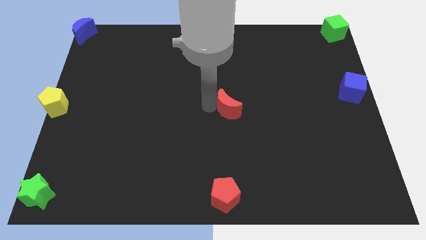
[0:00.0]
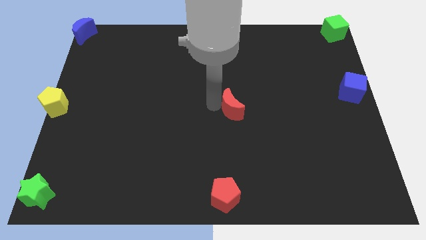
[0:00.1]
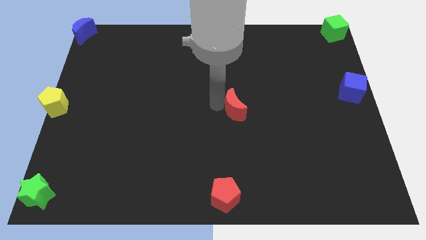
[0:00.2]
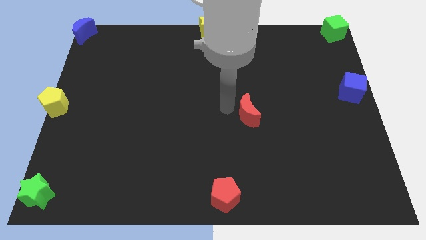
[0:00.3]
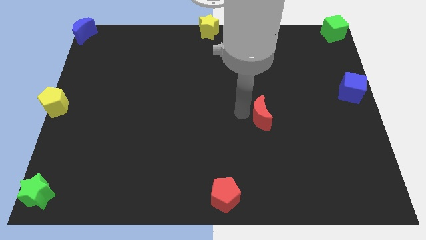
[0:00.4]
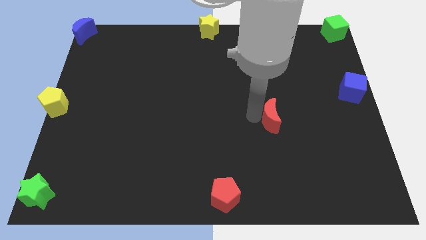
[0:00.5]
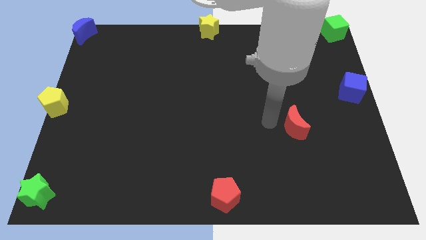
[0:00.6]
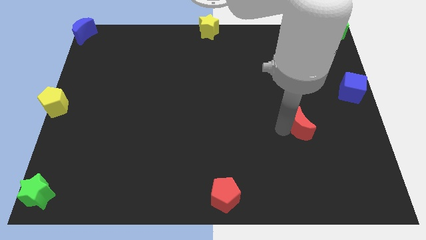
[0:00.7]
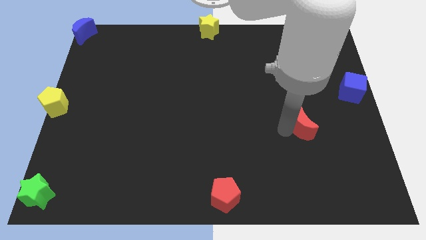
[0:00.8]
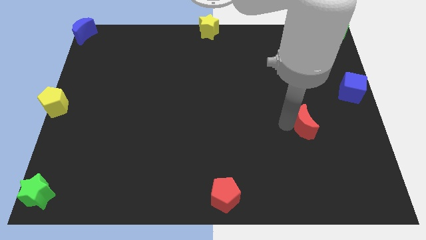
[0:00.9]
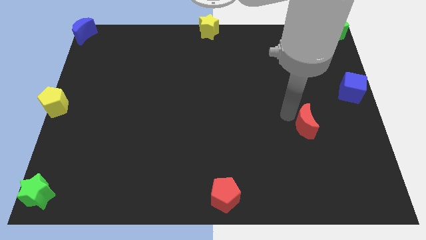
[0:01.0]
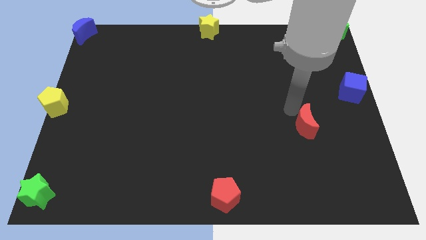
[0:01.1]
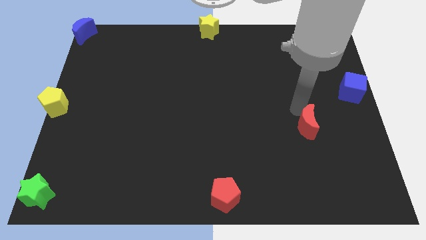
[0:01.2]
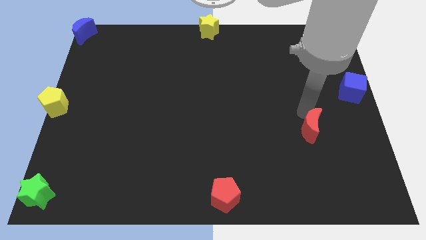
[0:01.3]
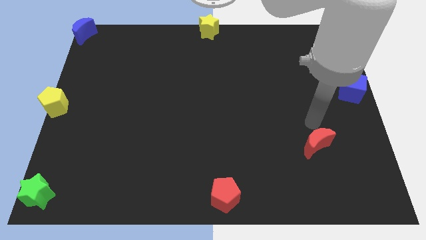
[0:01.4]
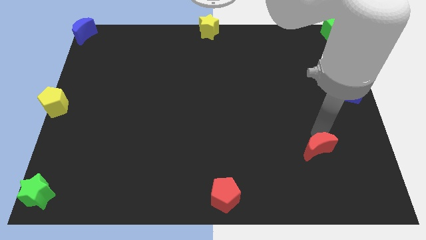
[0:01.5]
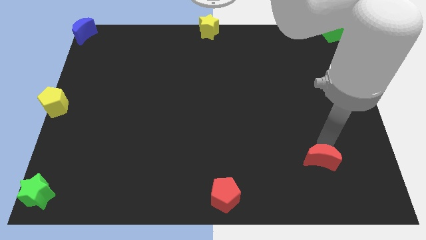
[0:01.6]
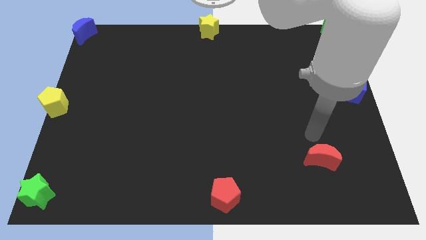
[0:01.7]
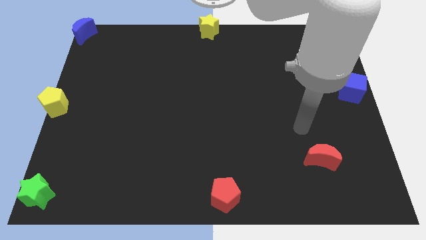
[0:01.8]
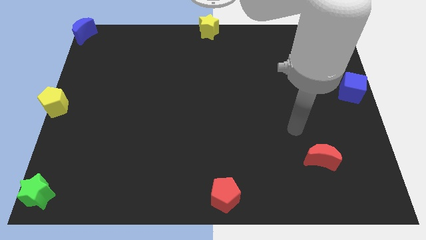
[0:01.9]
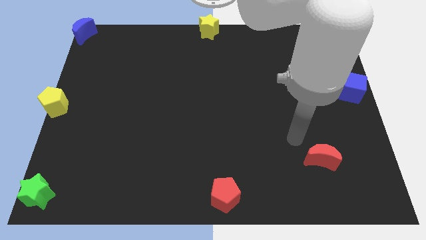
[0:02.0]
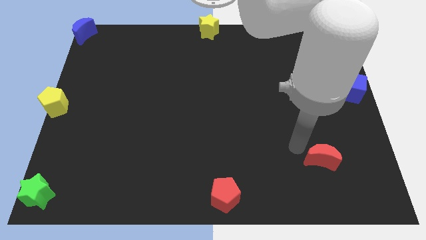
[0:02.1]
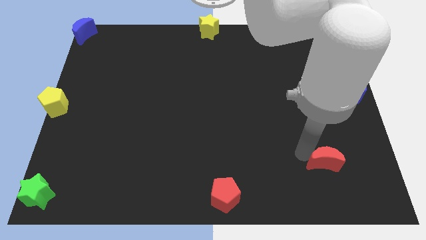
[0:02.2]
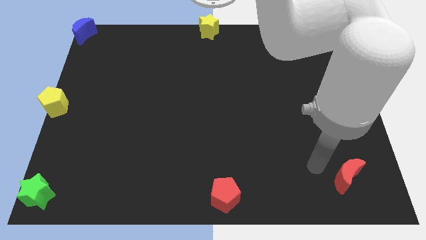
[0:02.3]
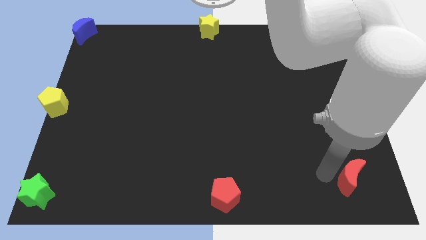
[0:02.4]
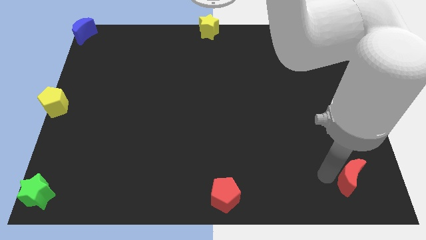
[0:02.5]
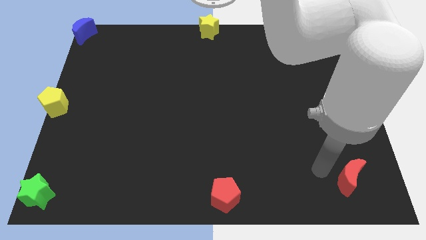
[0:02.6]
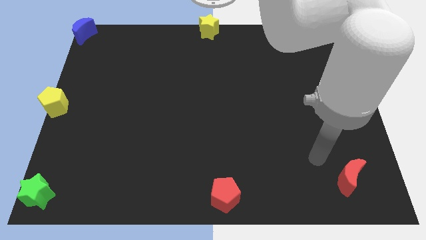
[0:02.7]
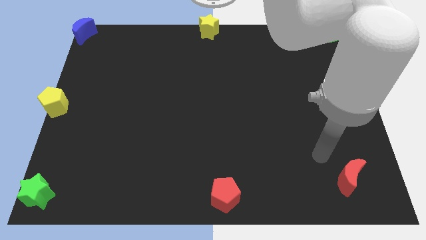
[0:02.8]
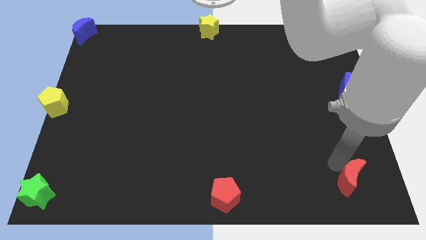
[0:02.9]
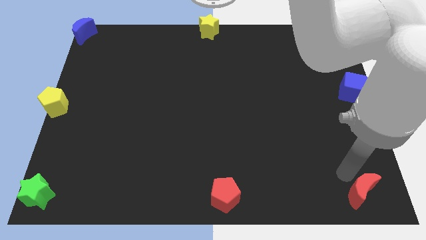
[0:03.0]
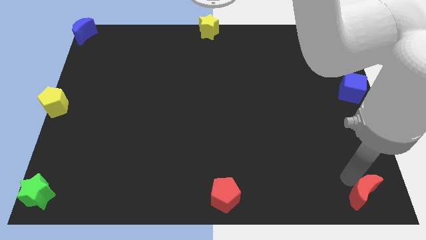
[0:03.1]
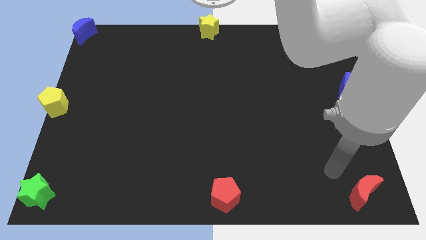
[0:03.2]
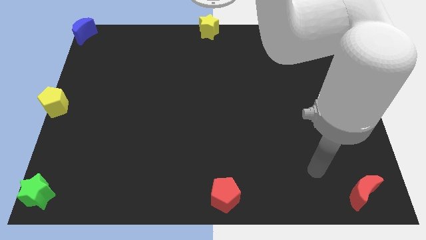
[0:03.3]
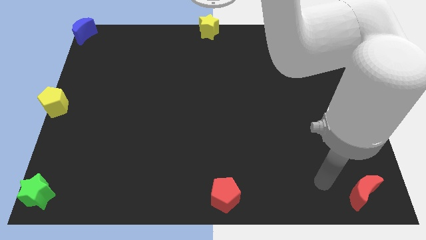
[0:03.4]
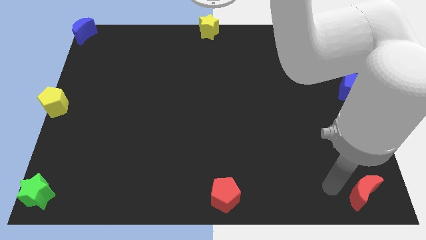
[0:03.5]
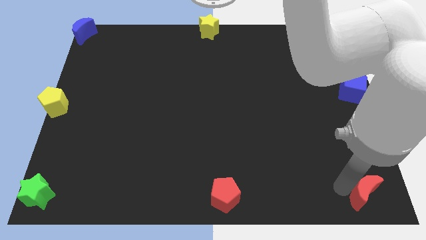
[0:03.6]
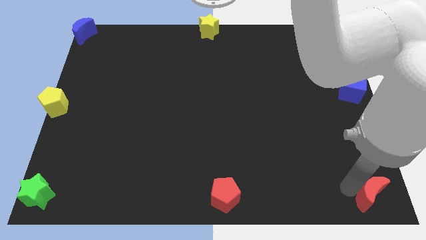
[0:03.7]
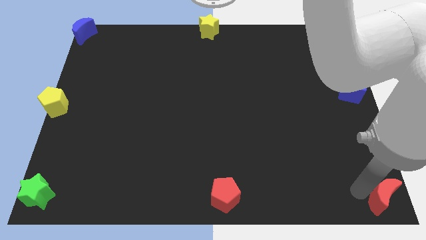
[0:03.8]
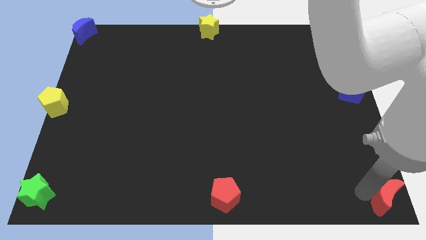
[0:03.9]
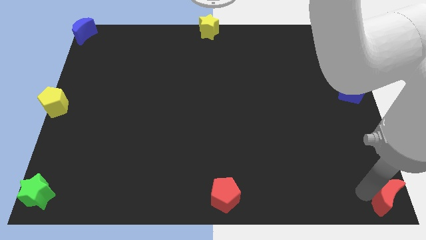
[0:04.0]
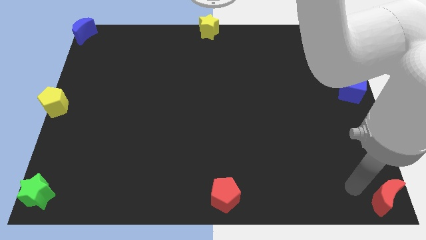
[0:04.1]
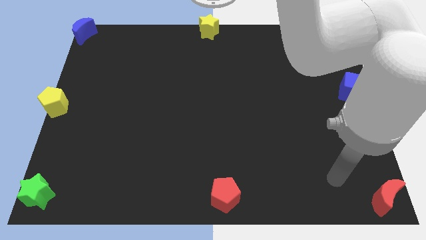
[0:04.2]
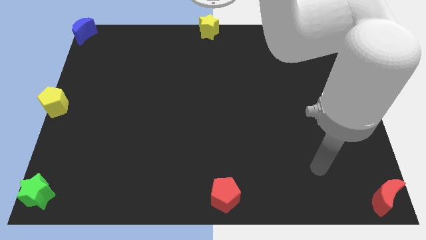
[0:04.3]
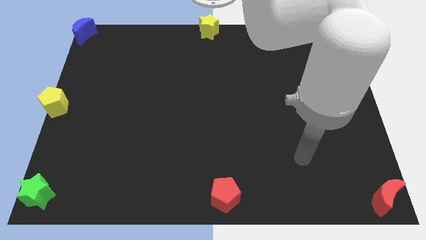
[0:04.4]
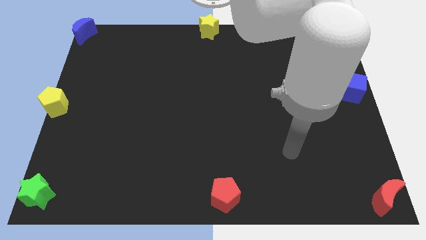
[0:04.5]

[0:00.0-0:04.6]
push the red crescent to the bottom right corner of the board

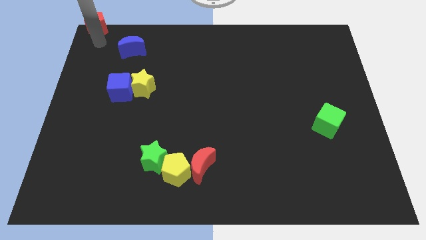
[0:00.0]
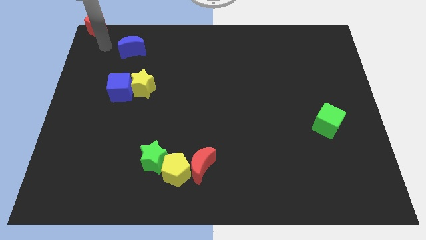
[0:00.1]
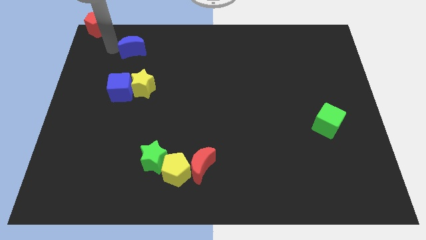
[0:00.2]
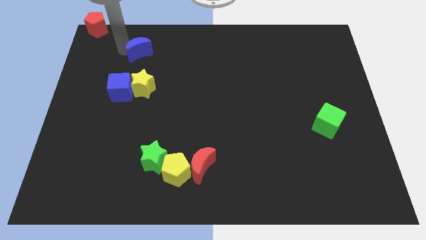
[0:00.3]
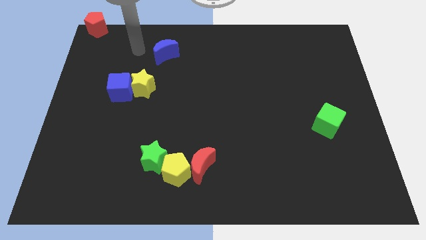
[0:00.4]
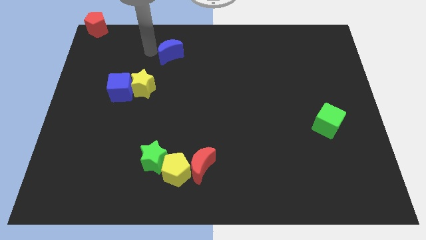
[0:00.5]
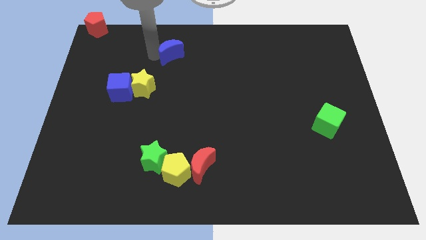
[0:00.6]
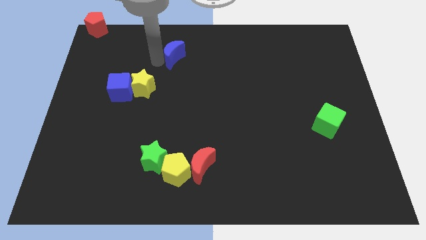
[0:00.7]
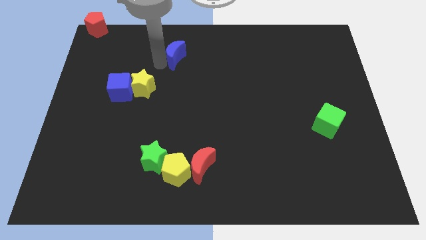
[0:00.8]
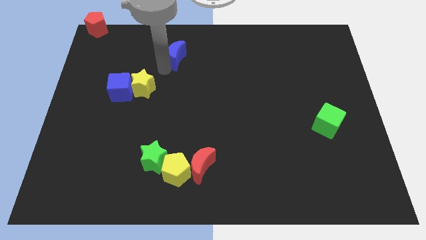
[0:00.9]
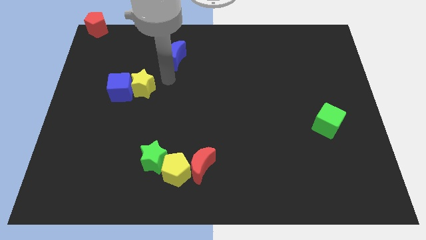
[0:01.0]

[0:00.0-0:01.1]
place blue moon to the top right of the yellow star

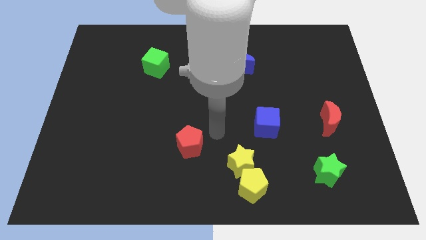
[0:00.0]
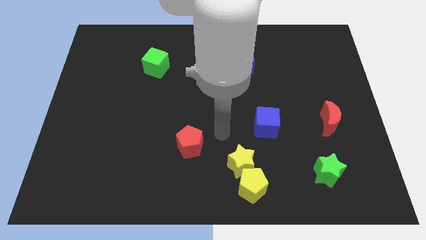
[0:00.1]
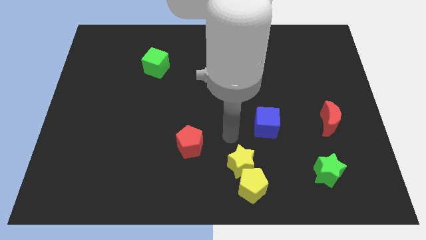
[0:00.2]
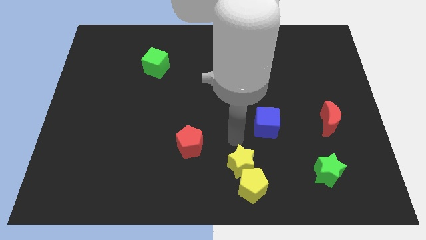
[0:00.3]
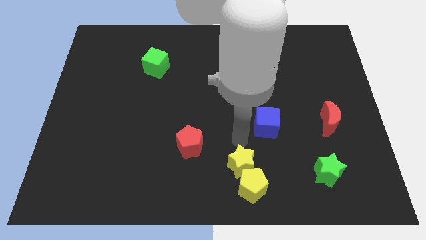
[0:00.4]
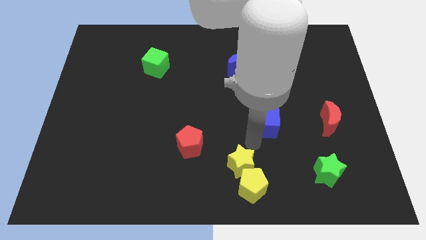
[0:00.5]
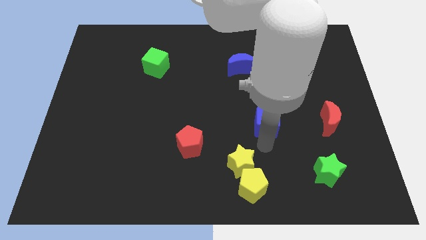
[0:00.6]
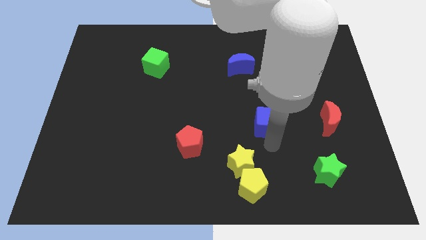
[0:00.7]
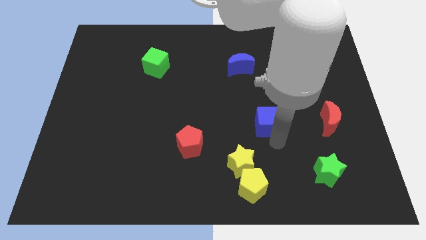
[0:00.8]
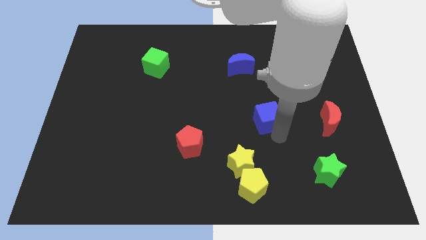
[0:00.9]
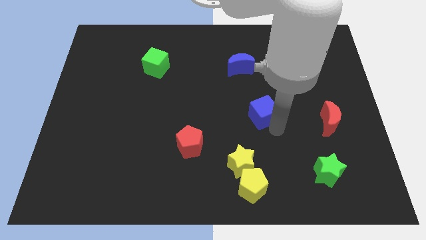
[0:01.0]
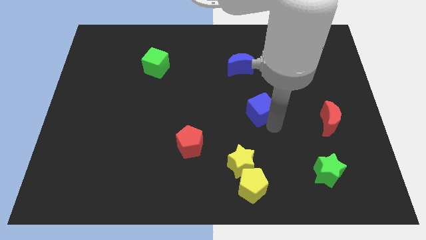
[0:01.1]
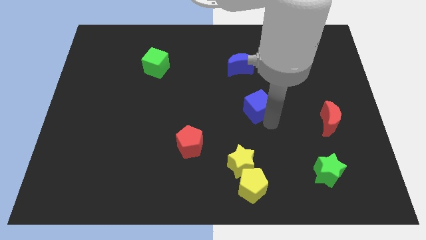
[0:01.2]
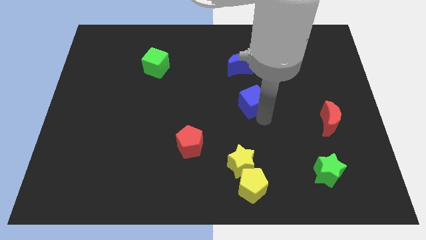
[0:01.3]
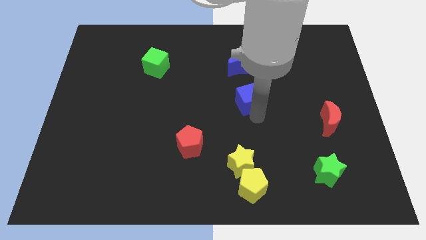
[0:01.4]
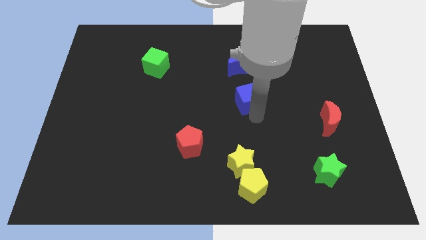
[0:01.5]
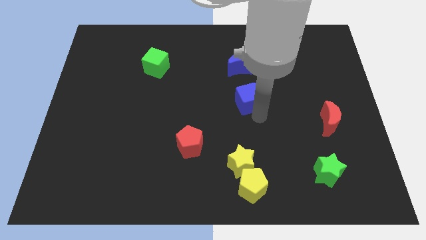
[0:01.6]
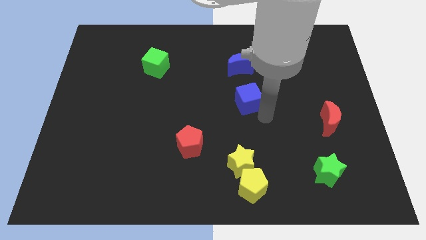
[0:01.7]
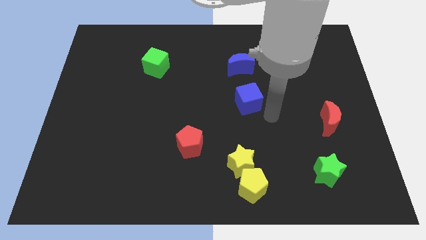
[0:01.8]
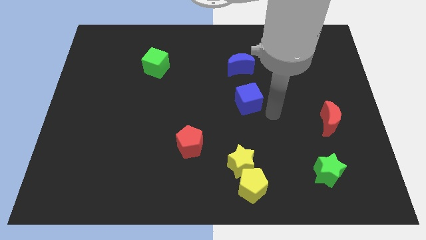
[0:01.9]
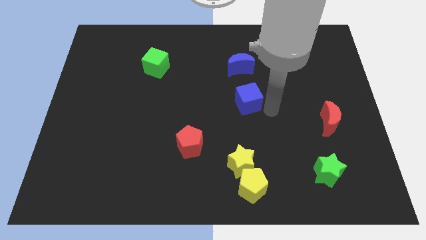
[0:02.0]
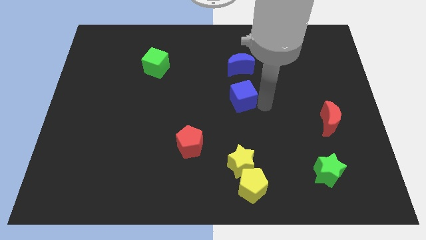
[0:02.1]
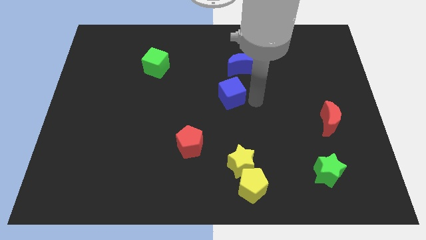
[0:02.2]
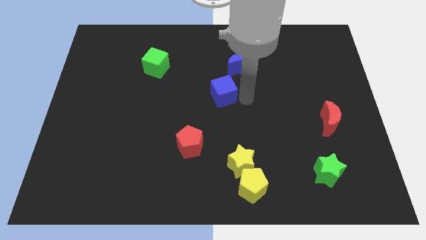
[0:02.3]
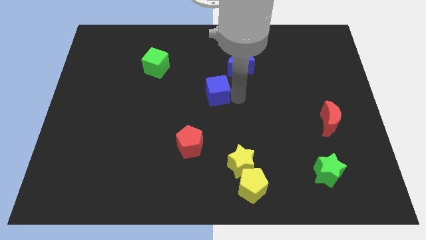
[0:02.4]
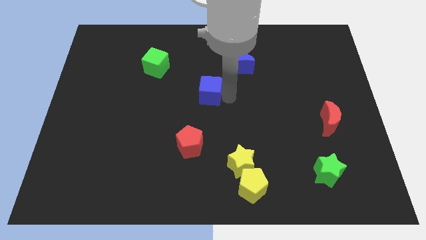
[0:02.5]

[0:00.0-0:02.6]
place the blue cube at the centre of the board

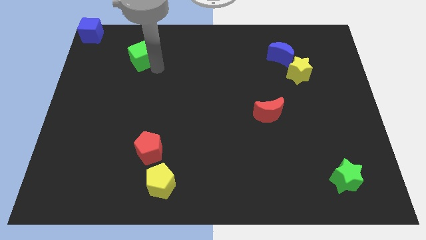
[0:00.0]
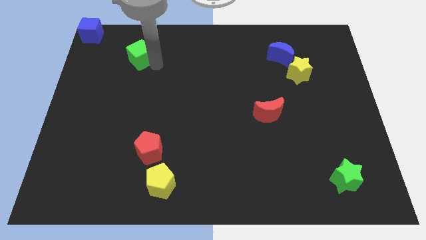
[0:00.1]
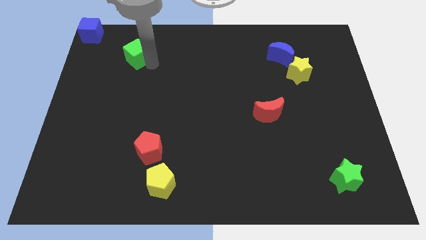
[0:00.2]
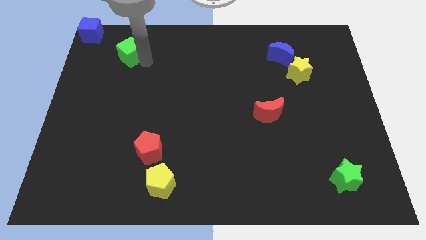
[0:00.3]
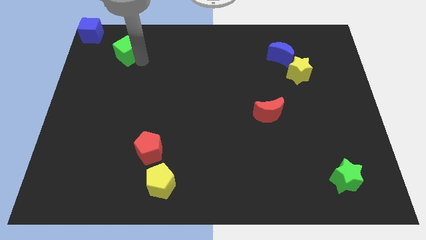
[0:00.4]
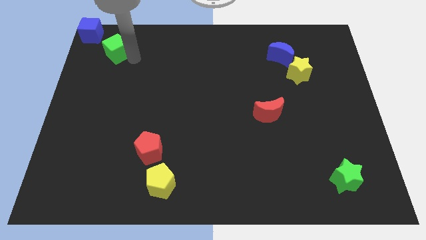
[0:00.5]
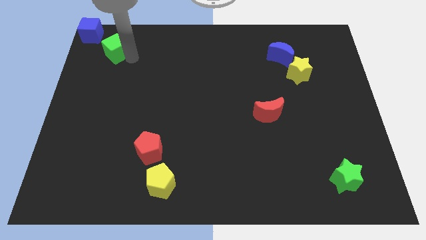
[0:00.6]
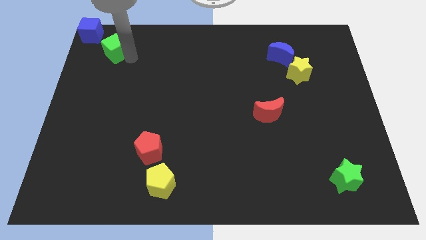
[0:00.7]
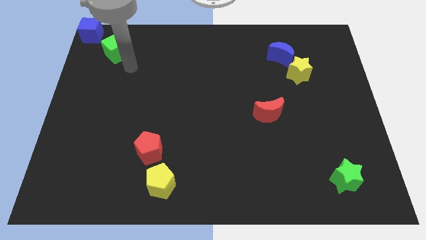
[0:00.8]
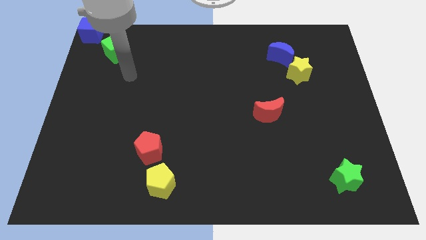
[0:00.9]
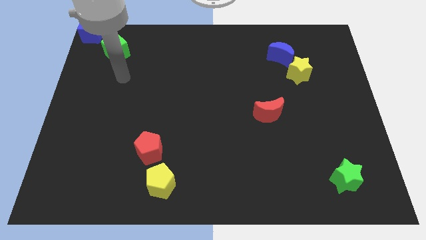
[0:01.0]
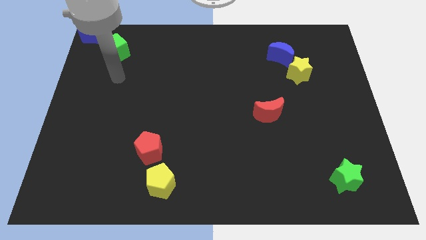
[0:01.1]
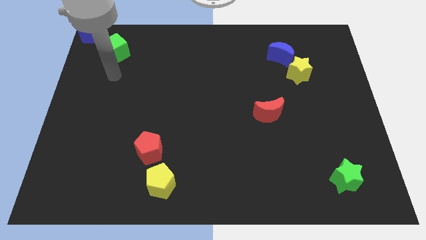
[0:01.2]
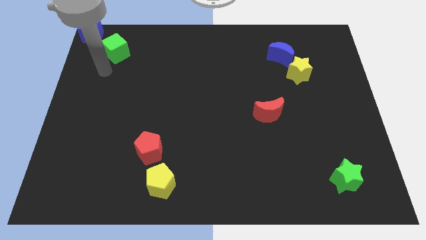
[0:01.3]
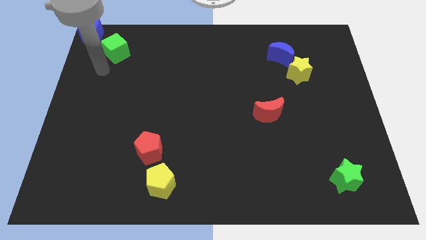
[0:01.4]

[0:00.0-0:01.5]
move the green cube diagonal to the blue cube
